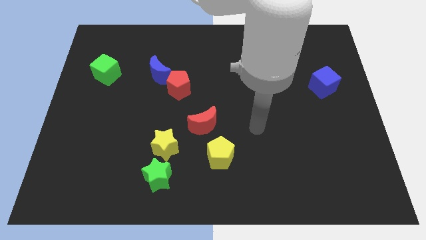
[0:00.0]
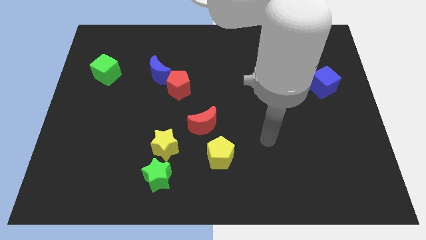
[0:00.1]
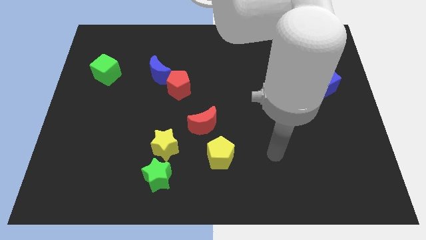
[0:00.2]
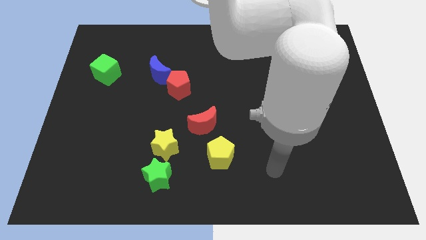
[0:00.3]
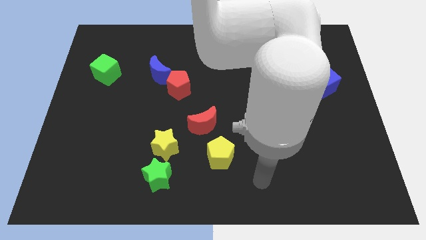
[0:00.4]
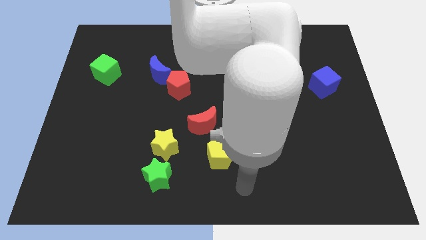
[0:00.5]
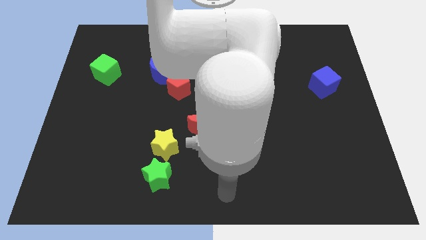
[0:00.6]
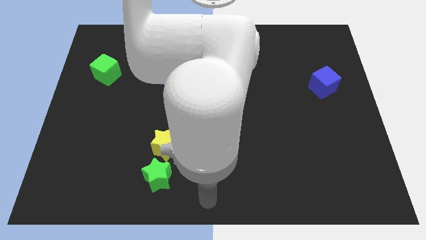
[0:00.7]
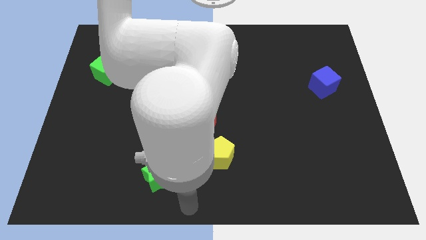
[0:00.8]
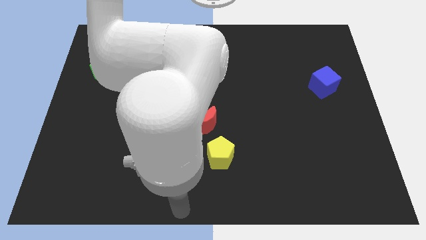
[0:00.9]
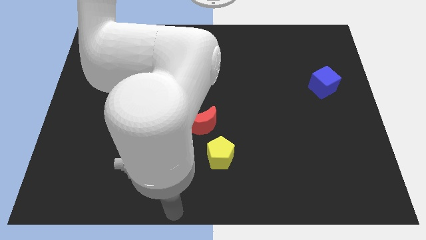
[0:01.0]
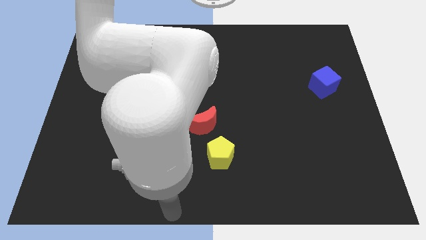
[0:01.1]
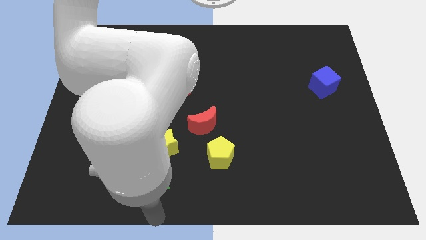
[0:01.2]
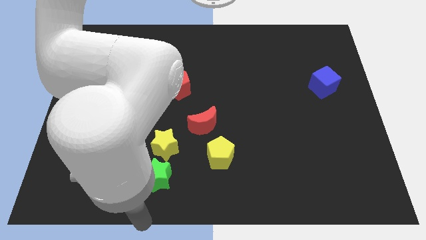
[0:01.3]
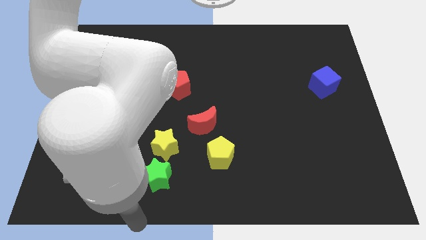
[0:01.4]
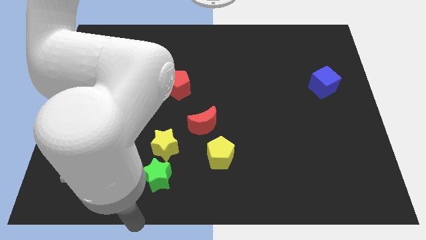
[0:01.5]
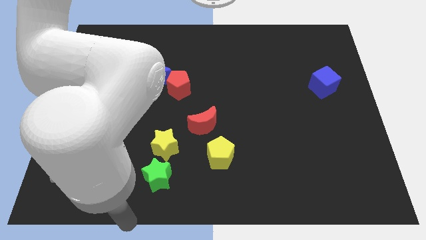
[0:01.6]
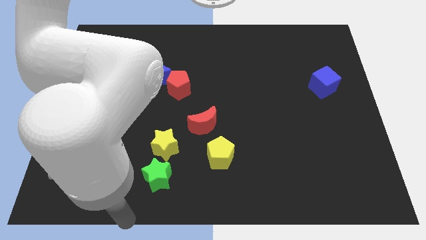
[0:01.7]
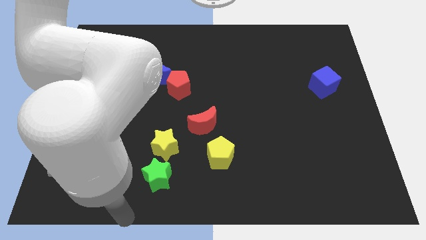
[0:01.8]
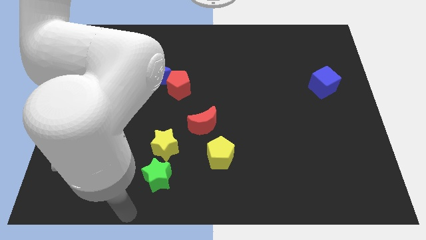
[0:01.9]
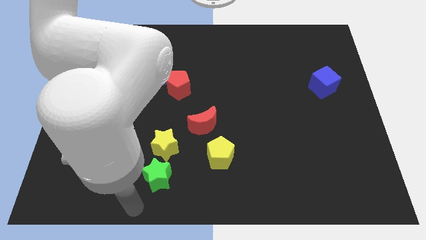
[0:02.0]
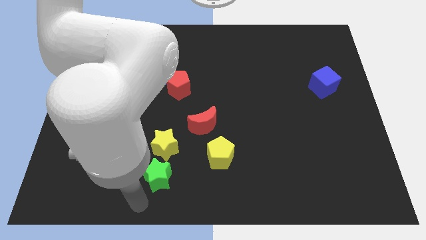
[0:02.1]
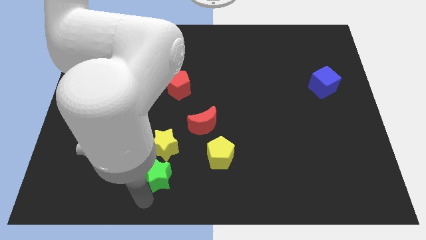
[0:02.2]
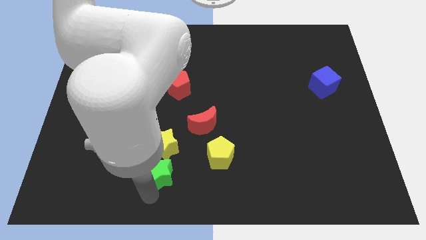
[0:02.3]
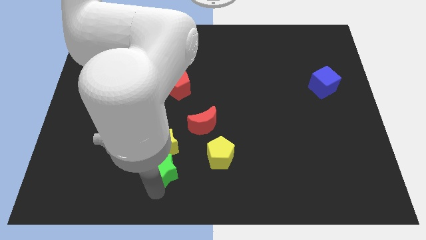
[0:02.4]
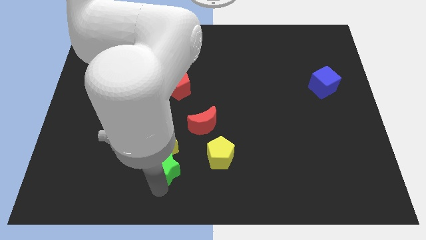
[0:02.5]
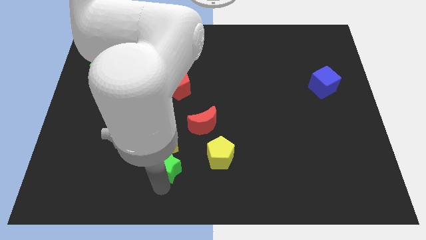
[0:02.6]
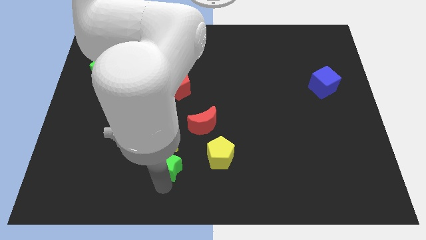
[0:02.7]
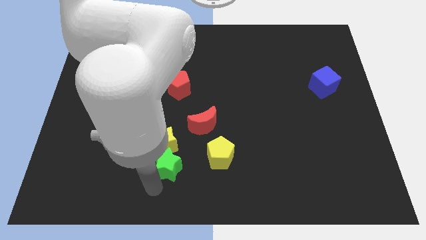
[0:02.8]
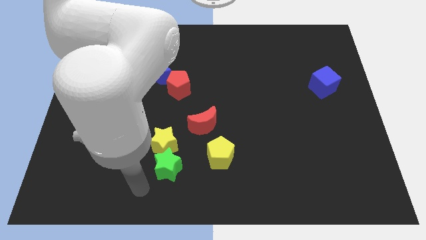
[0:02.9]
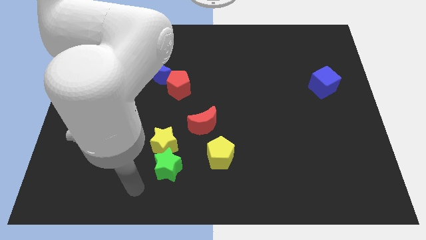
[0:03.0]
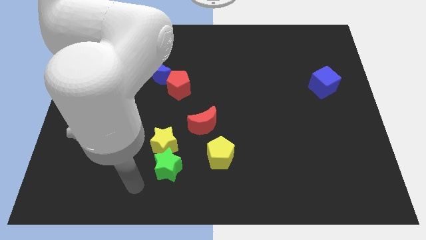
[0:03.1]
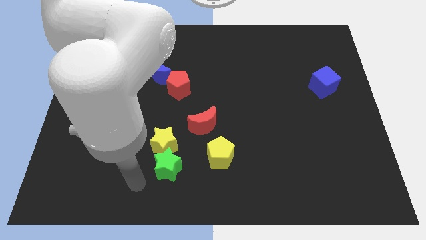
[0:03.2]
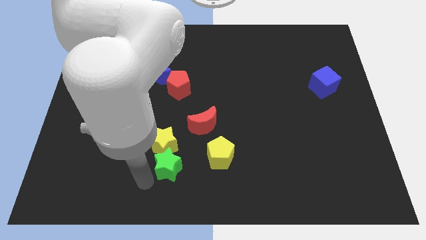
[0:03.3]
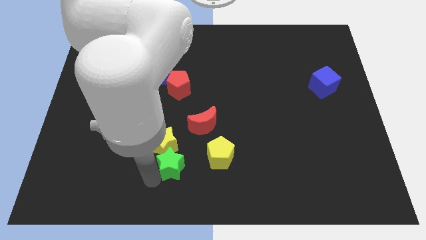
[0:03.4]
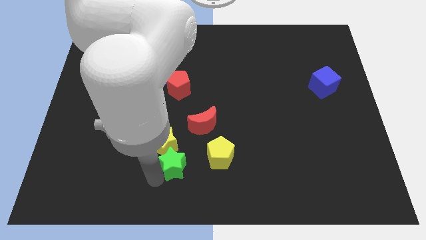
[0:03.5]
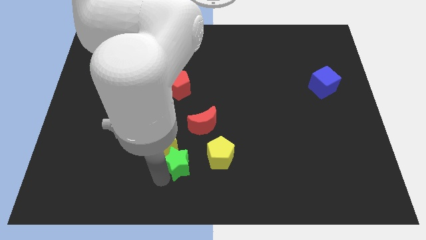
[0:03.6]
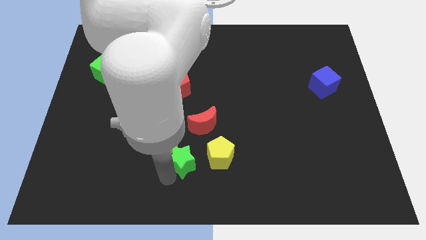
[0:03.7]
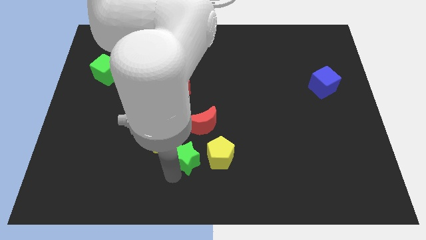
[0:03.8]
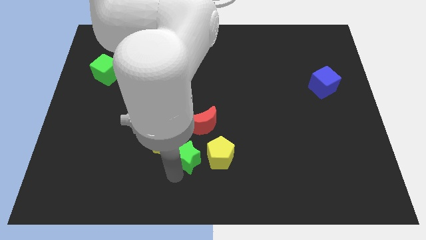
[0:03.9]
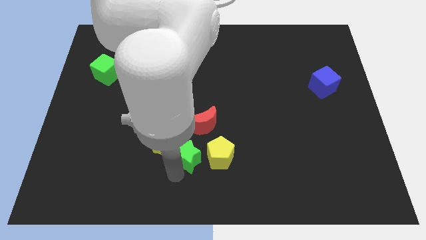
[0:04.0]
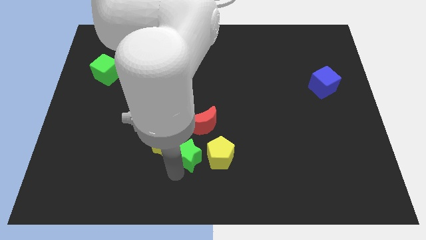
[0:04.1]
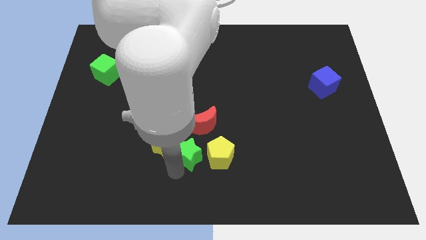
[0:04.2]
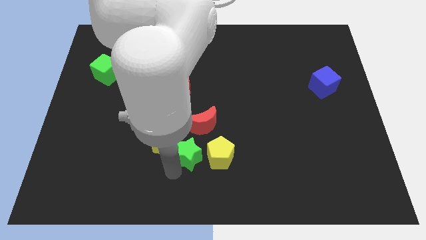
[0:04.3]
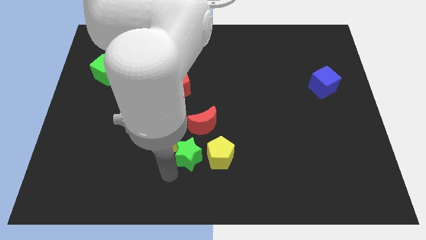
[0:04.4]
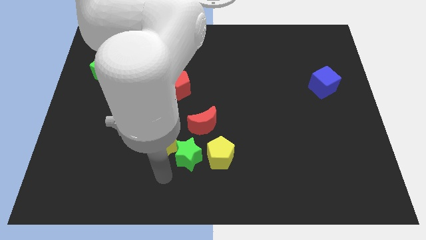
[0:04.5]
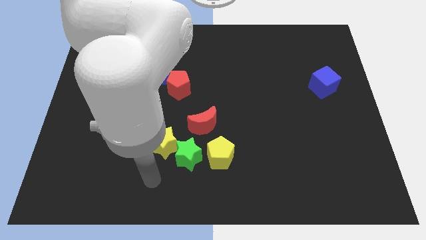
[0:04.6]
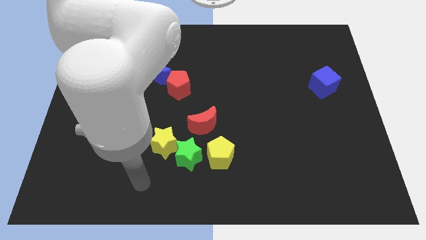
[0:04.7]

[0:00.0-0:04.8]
move the green star to the left of the yellow pentagon

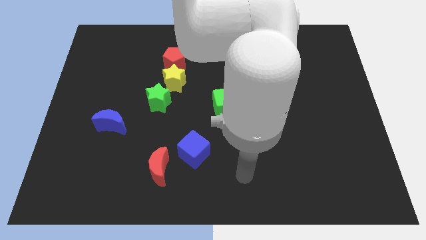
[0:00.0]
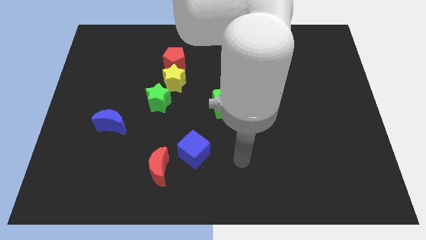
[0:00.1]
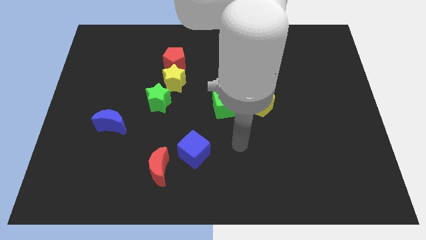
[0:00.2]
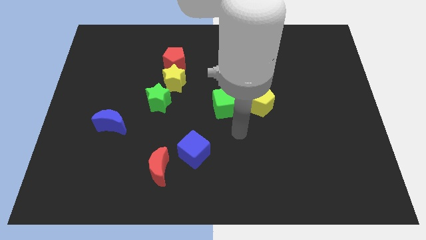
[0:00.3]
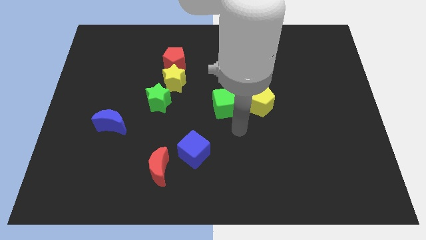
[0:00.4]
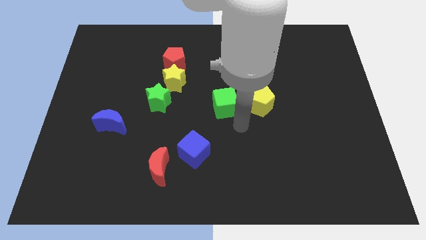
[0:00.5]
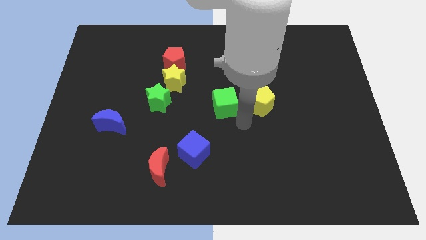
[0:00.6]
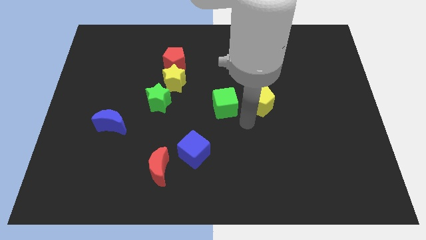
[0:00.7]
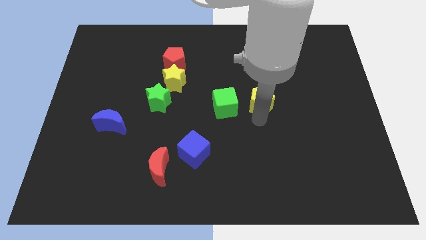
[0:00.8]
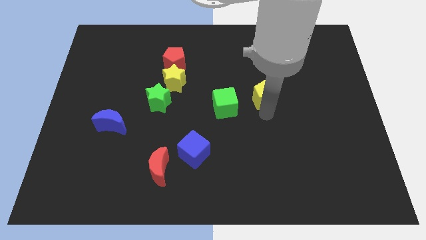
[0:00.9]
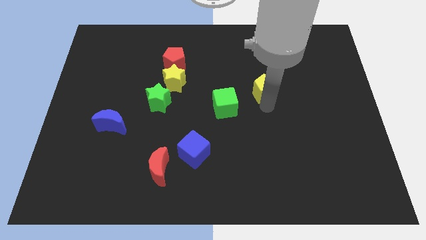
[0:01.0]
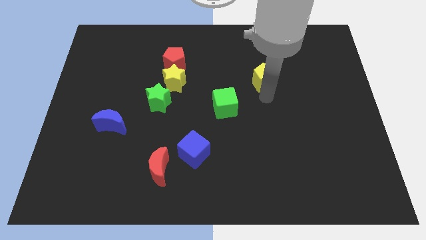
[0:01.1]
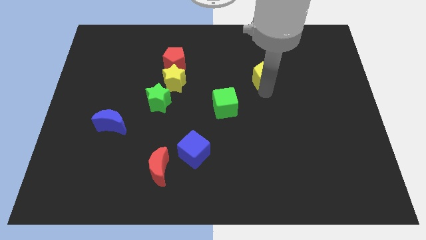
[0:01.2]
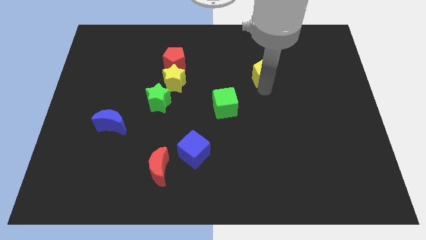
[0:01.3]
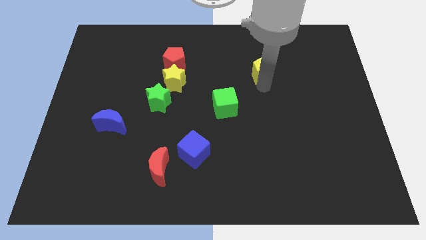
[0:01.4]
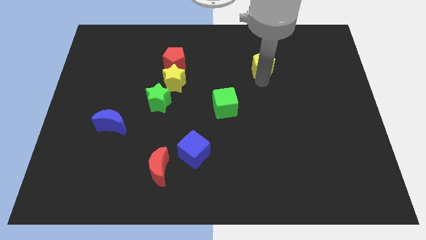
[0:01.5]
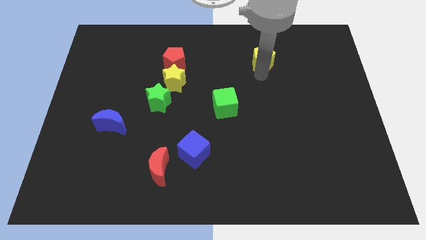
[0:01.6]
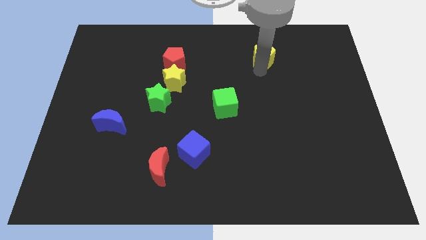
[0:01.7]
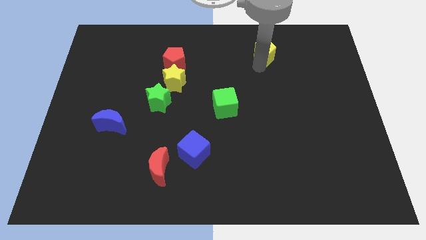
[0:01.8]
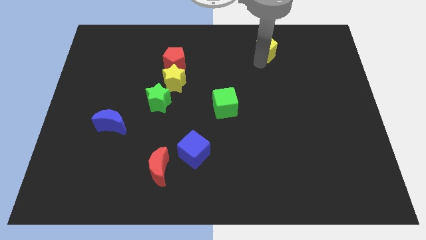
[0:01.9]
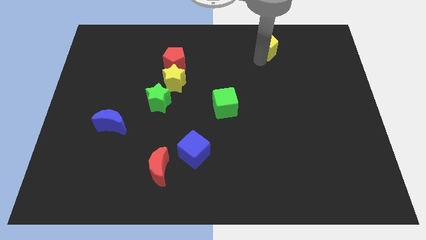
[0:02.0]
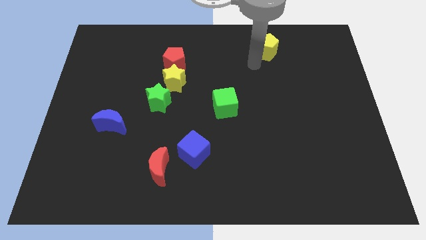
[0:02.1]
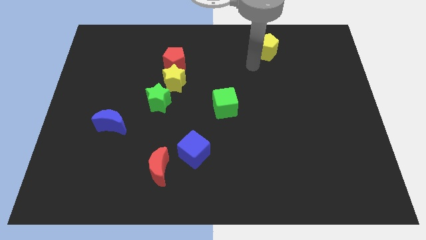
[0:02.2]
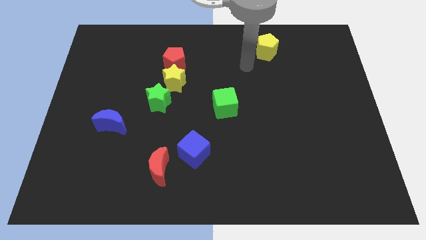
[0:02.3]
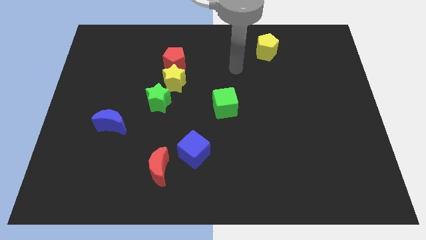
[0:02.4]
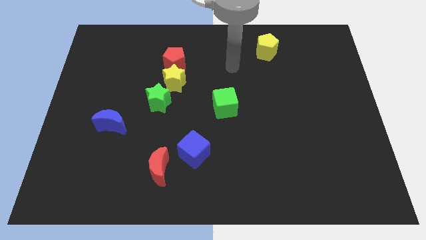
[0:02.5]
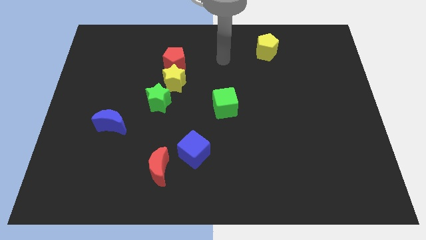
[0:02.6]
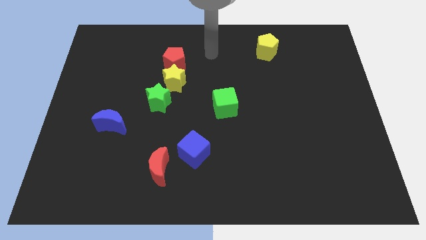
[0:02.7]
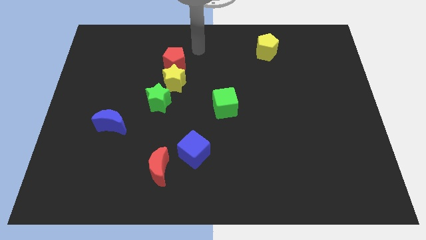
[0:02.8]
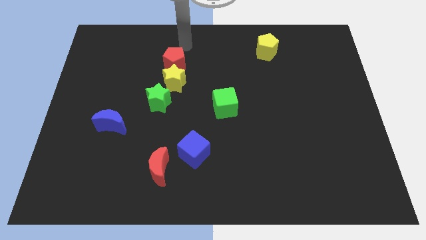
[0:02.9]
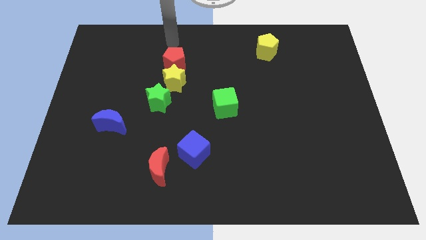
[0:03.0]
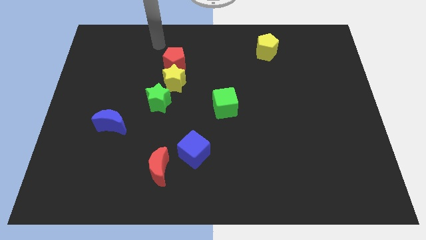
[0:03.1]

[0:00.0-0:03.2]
move the yellow pentagon to the top of the board

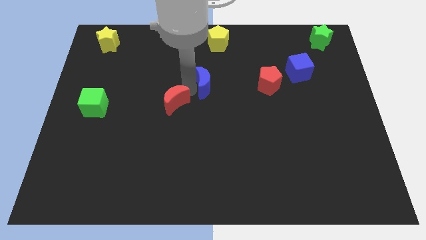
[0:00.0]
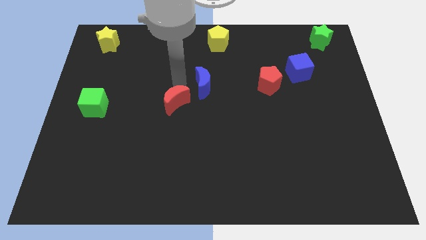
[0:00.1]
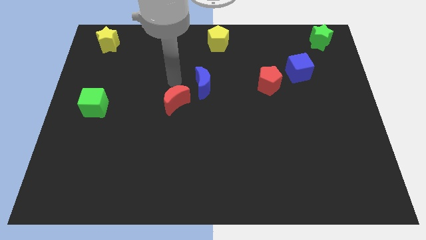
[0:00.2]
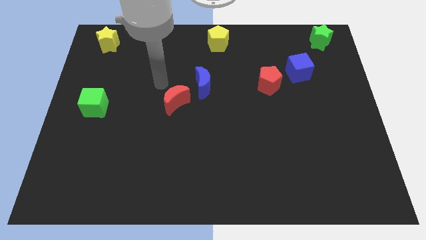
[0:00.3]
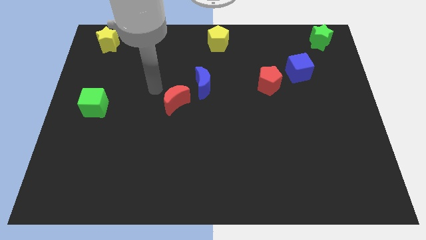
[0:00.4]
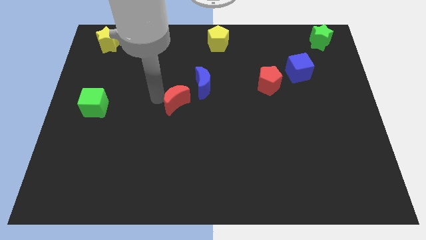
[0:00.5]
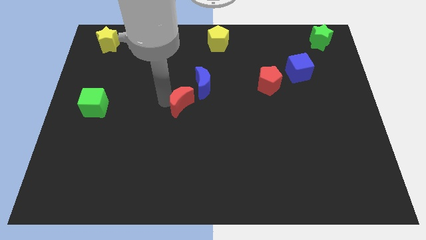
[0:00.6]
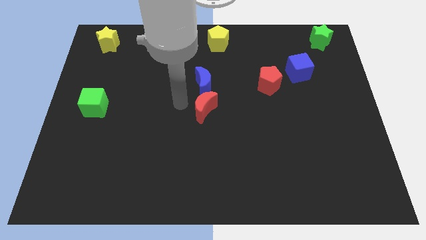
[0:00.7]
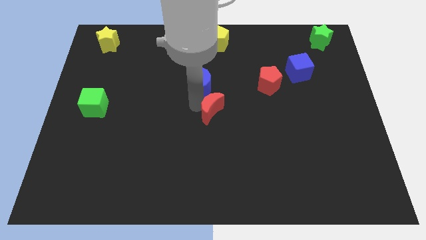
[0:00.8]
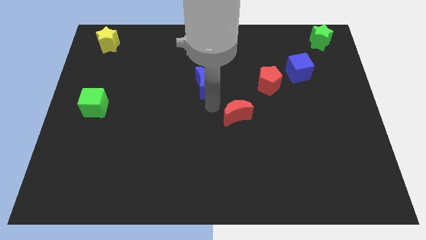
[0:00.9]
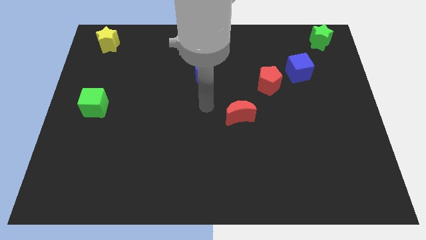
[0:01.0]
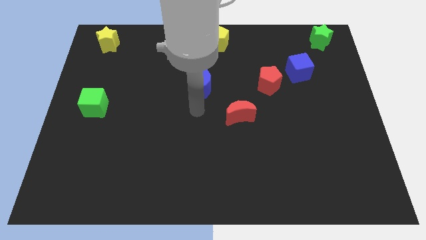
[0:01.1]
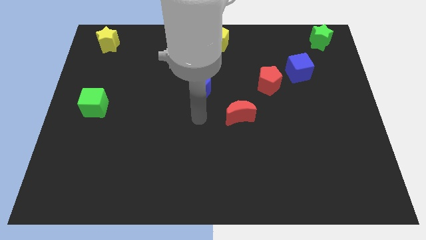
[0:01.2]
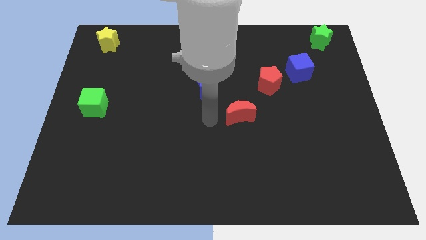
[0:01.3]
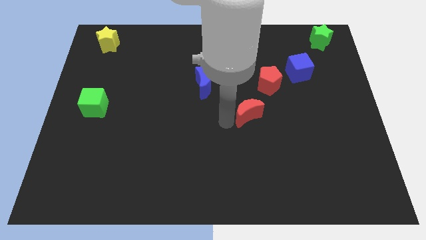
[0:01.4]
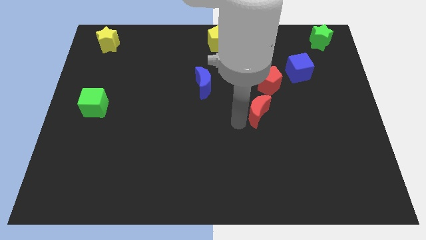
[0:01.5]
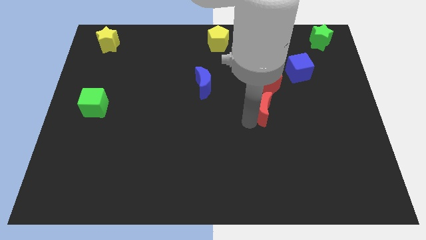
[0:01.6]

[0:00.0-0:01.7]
separate the red crescent from the blue crescent
